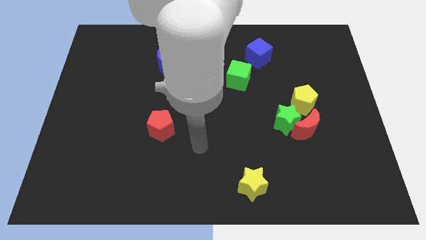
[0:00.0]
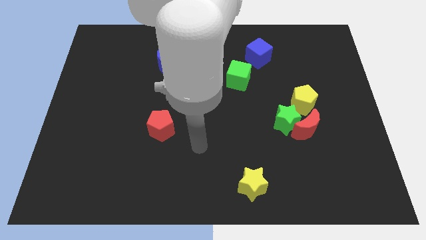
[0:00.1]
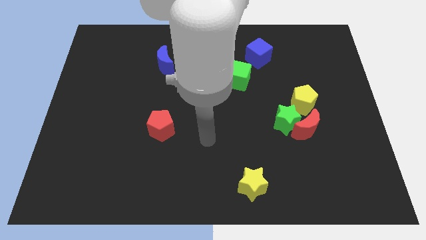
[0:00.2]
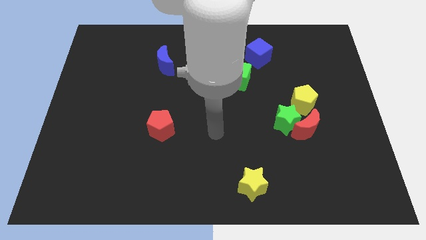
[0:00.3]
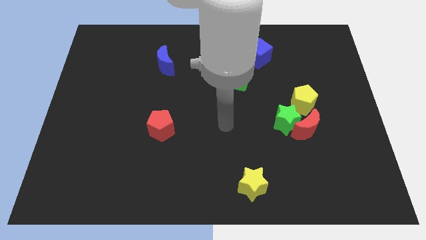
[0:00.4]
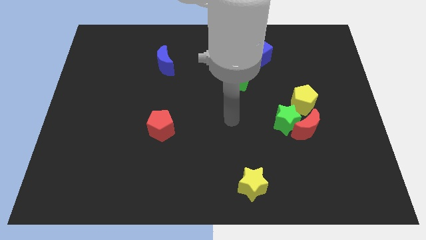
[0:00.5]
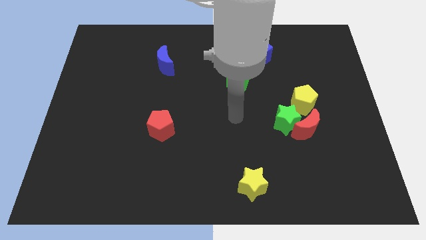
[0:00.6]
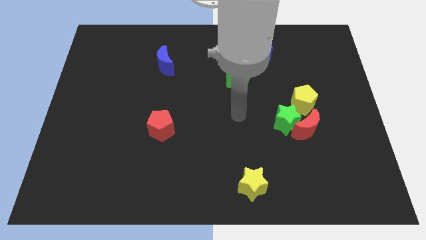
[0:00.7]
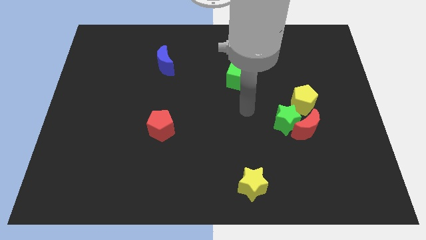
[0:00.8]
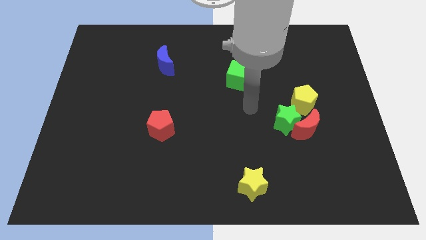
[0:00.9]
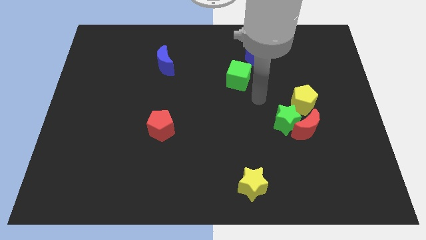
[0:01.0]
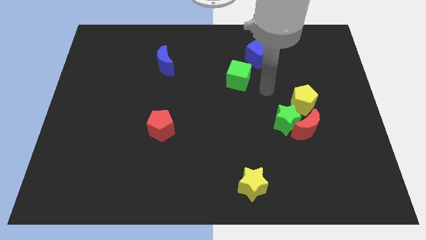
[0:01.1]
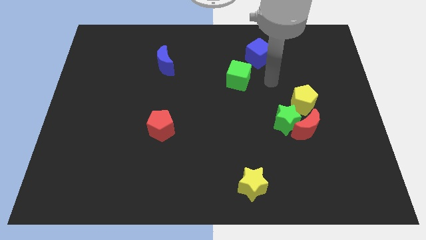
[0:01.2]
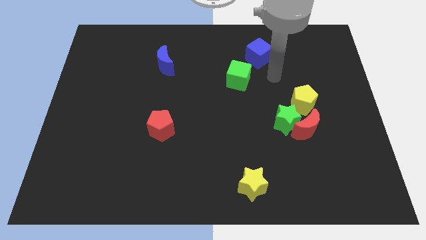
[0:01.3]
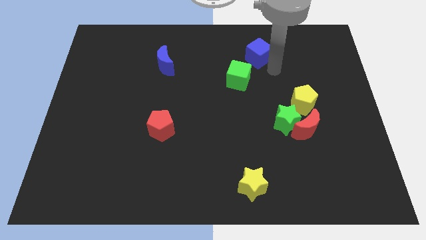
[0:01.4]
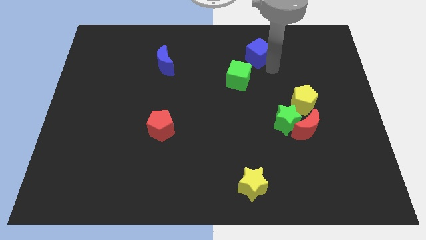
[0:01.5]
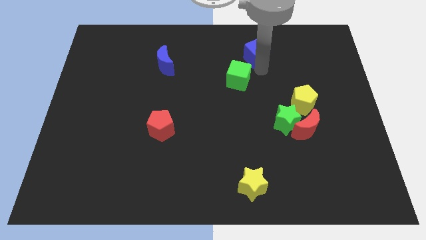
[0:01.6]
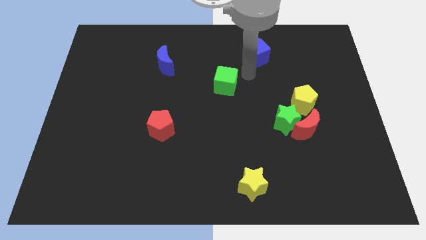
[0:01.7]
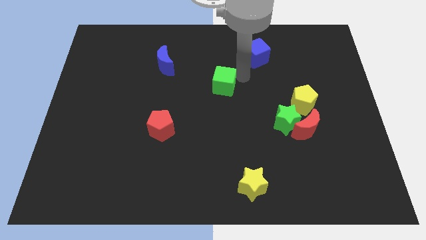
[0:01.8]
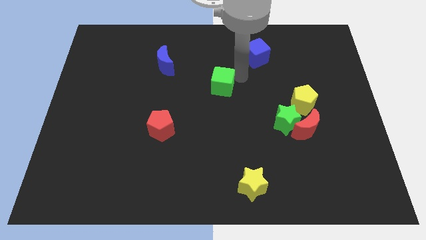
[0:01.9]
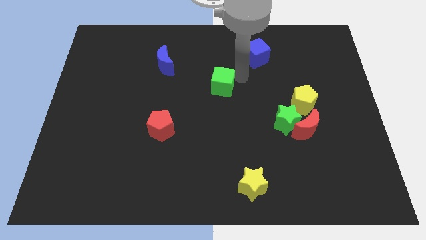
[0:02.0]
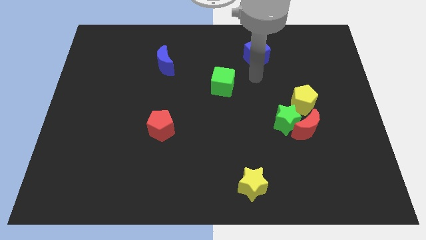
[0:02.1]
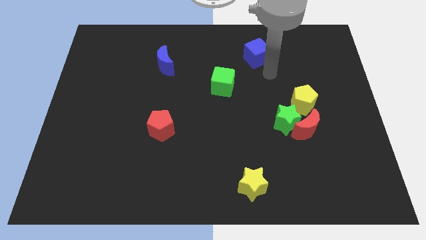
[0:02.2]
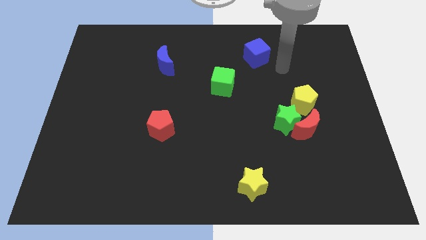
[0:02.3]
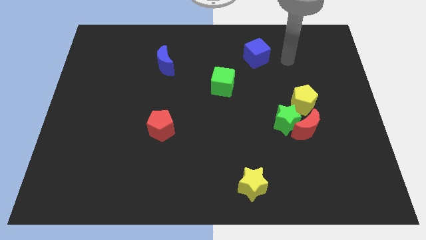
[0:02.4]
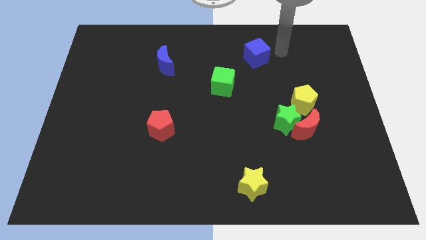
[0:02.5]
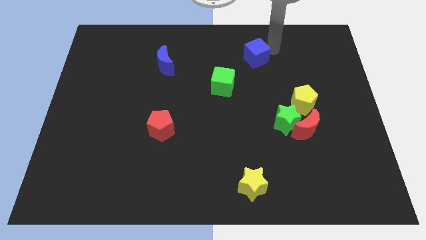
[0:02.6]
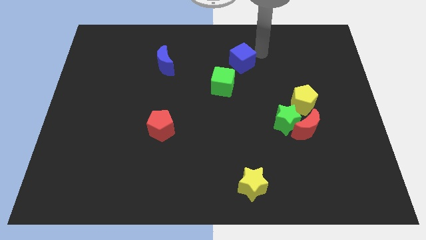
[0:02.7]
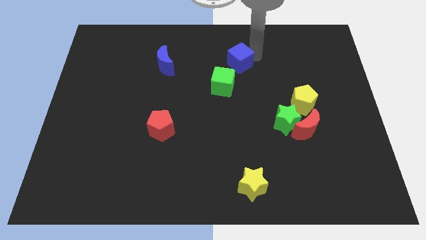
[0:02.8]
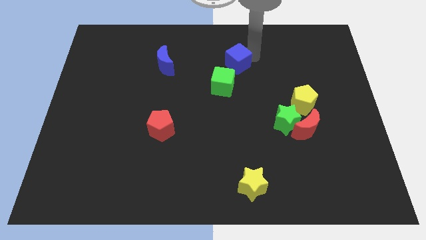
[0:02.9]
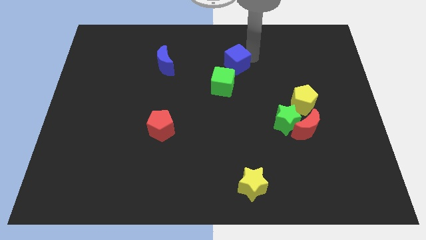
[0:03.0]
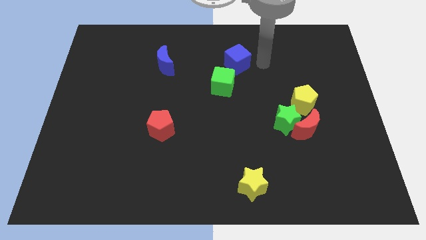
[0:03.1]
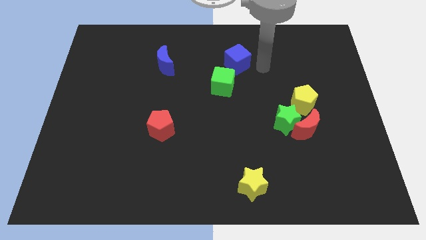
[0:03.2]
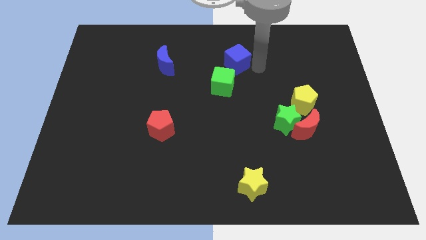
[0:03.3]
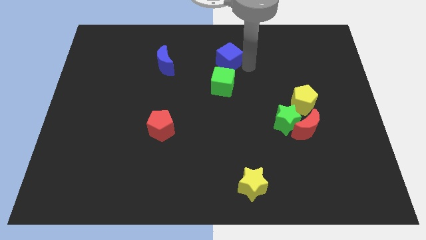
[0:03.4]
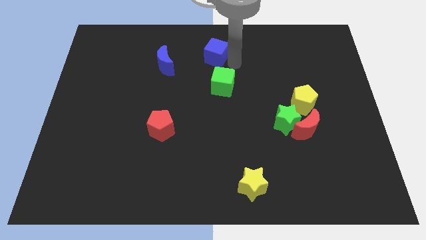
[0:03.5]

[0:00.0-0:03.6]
push the green and blue cubes towards the left side of the board

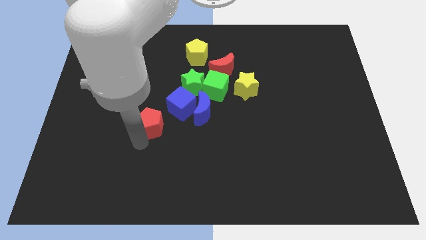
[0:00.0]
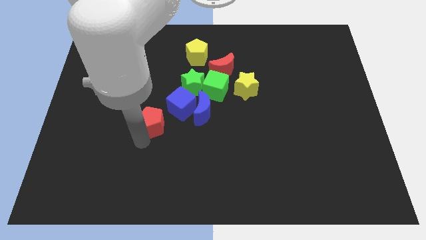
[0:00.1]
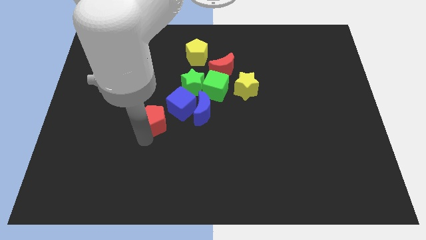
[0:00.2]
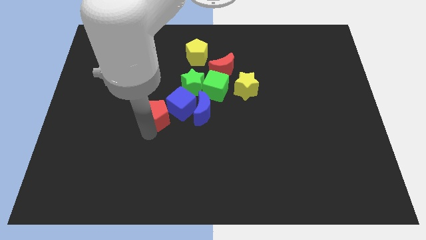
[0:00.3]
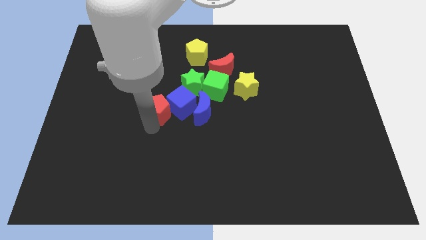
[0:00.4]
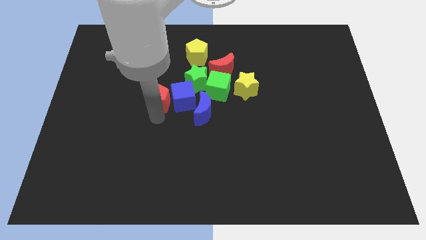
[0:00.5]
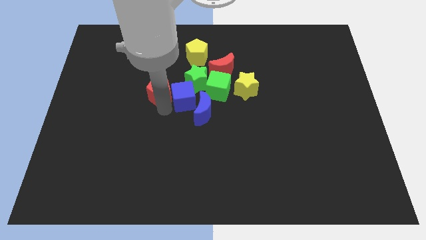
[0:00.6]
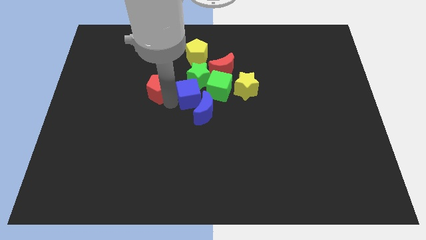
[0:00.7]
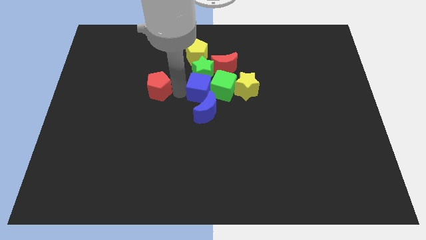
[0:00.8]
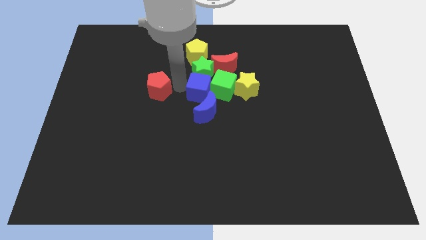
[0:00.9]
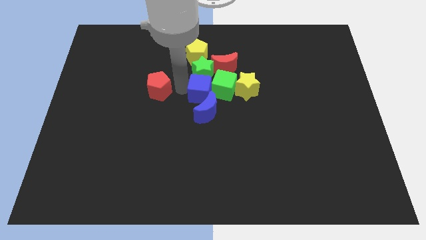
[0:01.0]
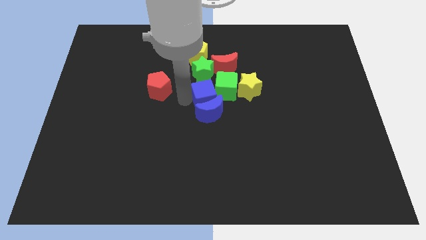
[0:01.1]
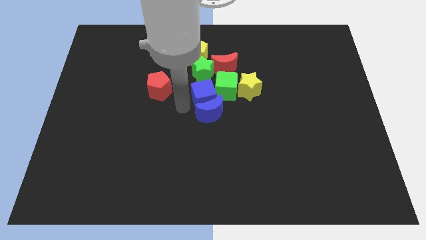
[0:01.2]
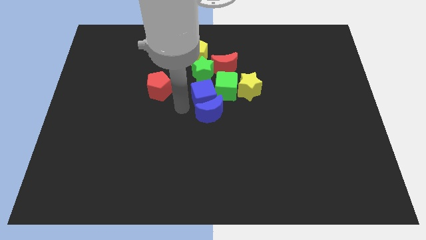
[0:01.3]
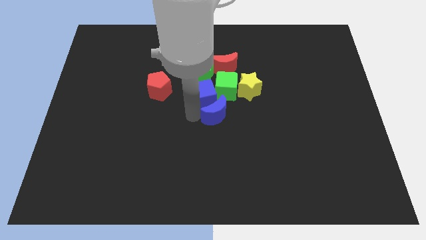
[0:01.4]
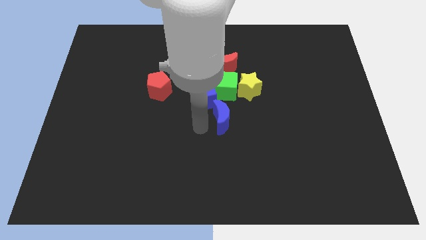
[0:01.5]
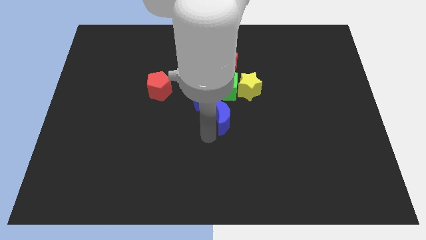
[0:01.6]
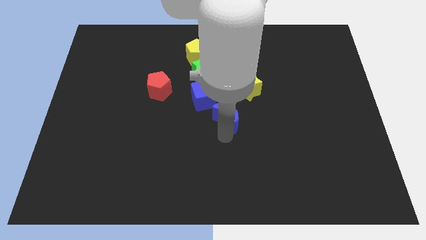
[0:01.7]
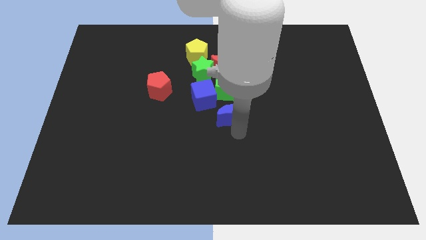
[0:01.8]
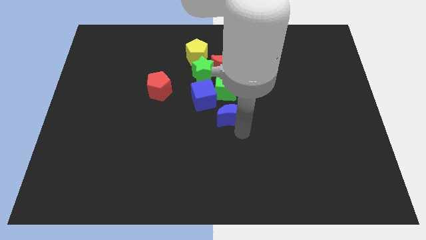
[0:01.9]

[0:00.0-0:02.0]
separate the blue moon from the blue cube

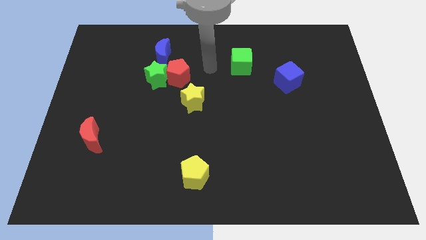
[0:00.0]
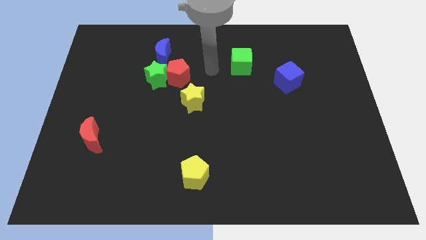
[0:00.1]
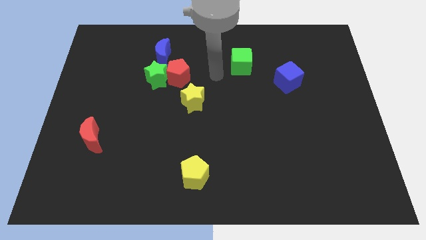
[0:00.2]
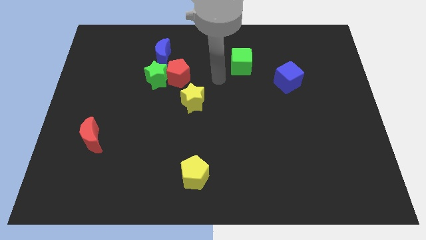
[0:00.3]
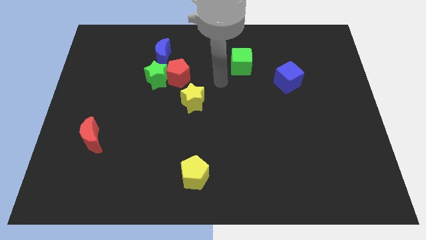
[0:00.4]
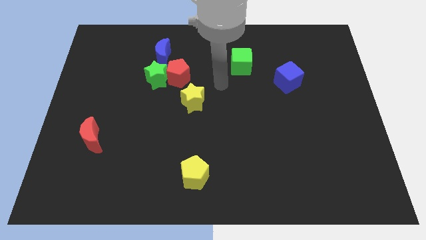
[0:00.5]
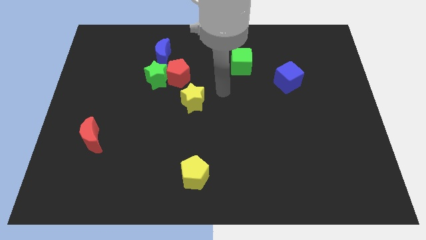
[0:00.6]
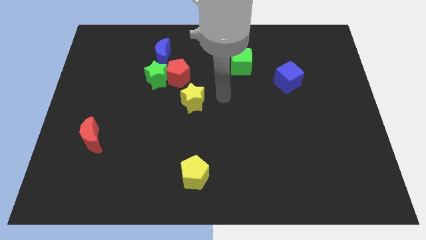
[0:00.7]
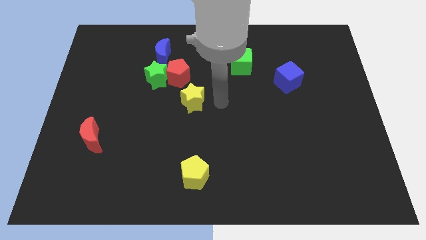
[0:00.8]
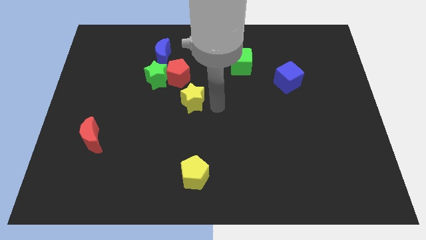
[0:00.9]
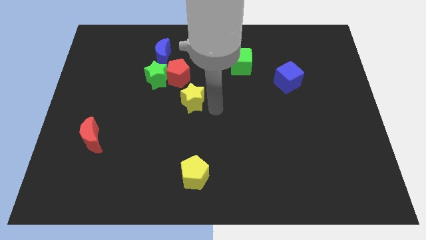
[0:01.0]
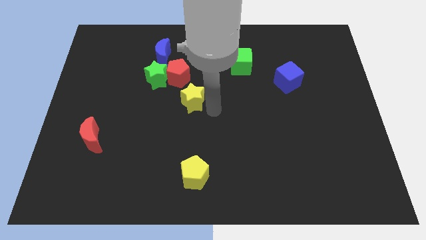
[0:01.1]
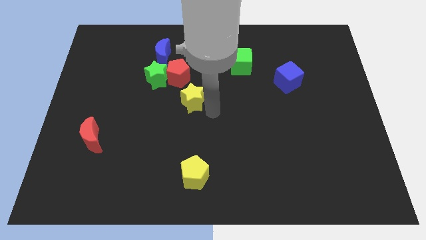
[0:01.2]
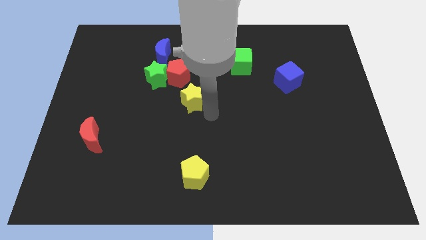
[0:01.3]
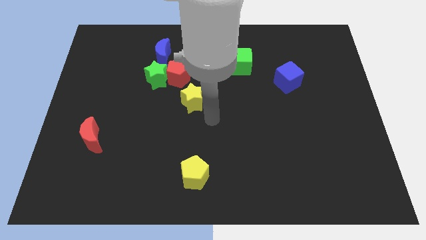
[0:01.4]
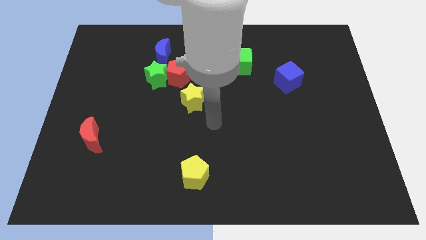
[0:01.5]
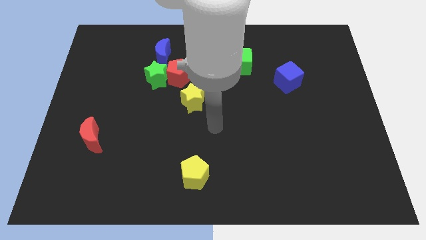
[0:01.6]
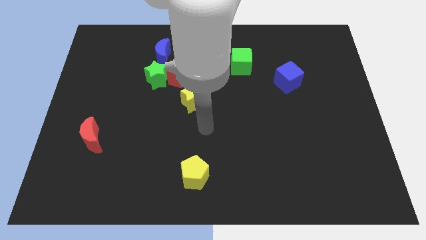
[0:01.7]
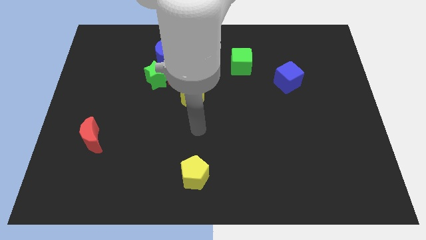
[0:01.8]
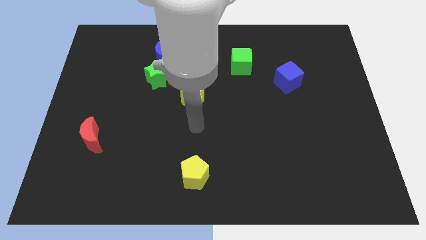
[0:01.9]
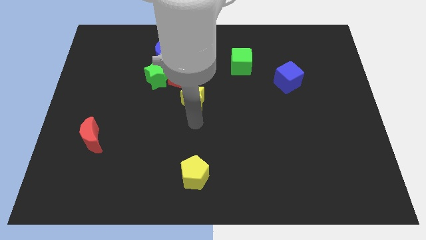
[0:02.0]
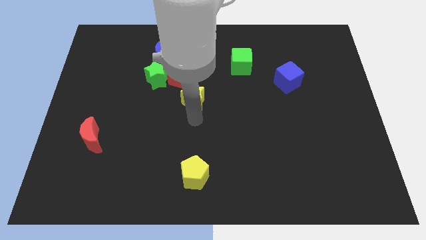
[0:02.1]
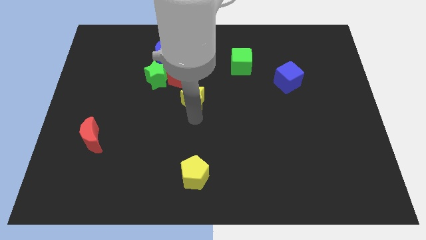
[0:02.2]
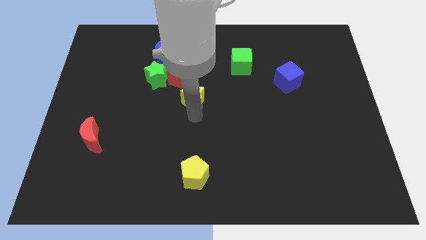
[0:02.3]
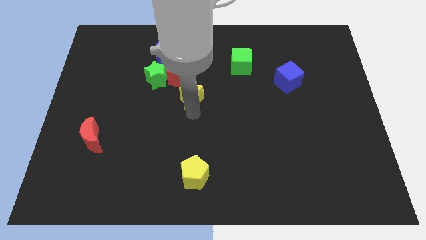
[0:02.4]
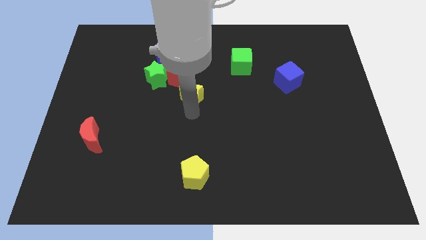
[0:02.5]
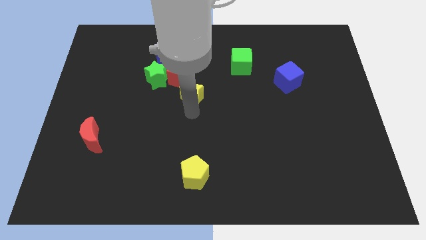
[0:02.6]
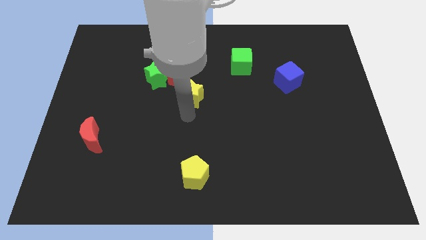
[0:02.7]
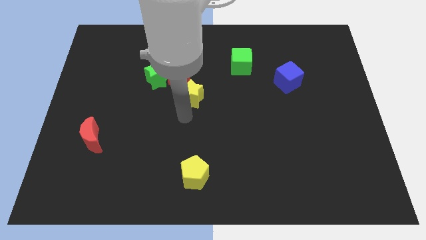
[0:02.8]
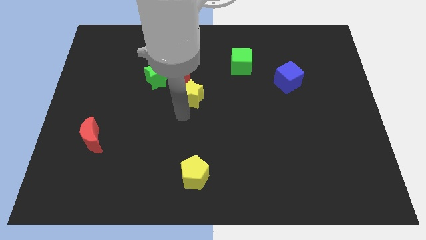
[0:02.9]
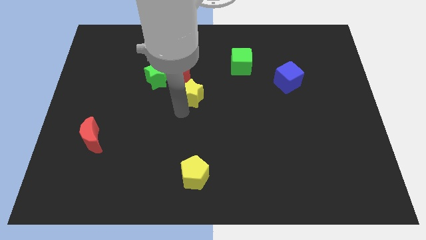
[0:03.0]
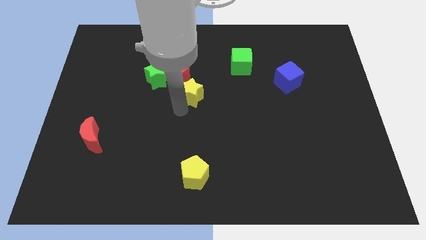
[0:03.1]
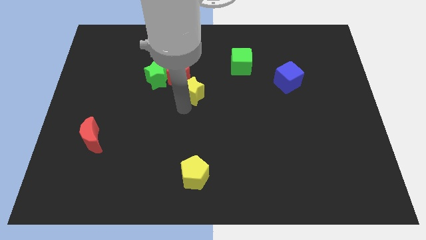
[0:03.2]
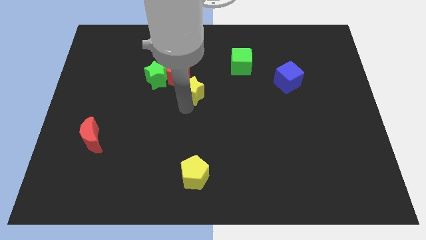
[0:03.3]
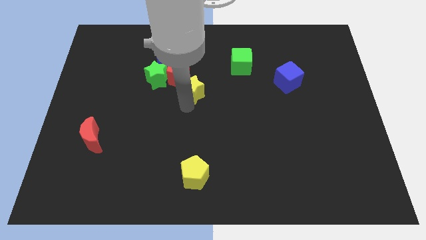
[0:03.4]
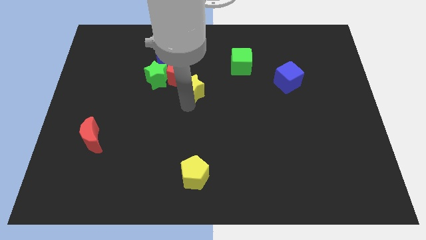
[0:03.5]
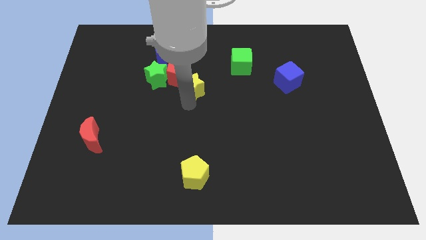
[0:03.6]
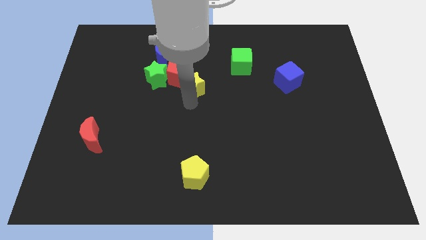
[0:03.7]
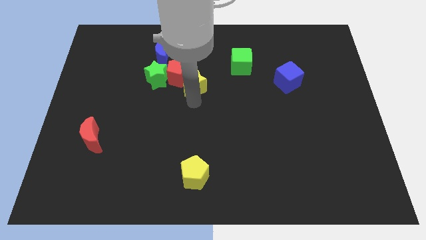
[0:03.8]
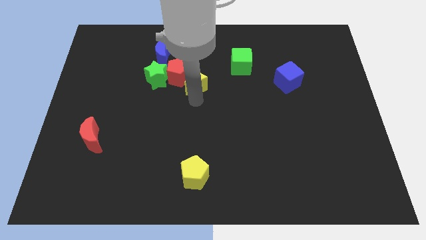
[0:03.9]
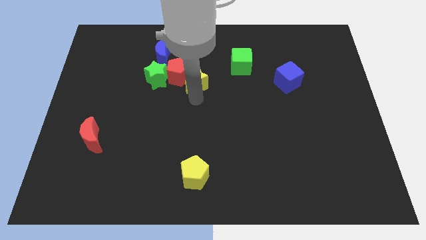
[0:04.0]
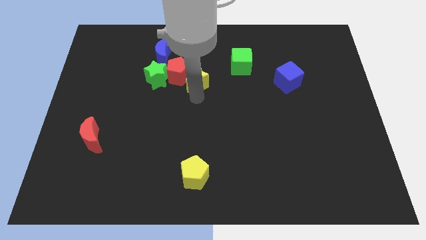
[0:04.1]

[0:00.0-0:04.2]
put the yellow star to the bottom right side of the red pentagon
